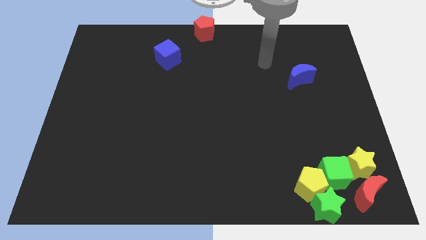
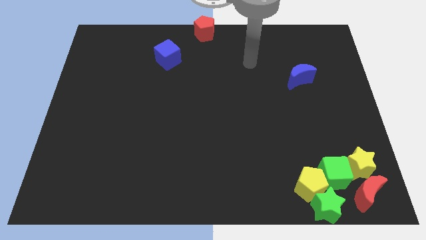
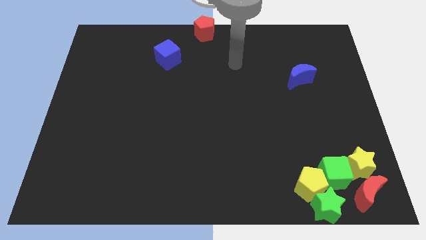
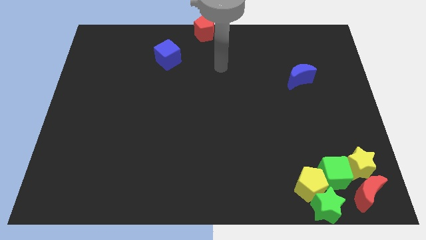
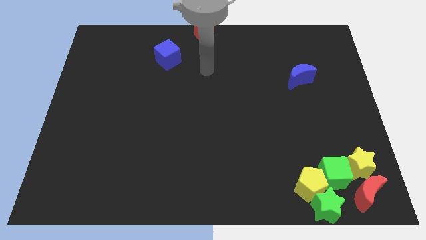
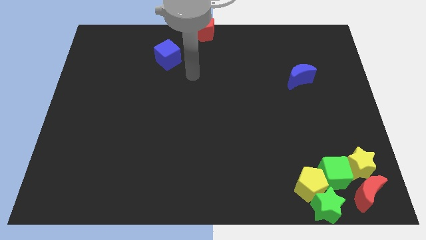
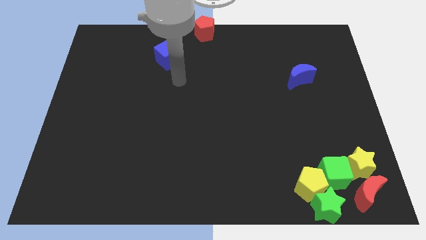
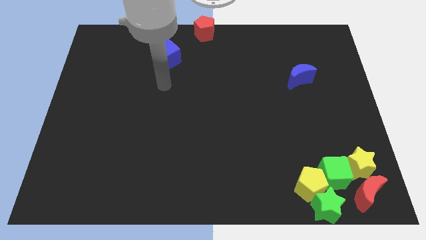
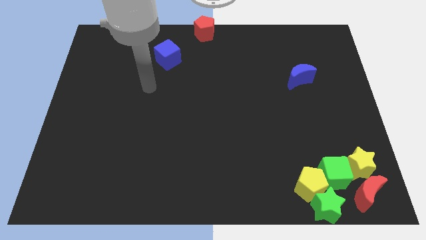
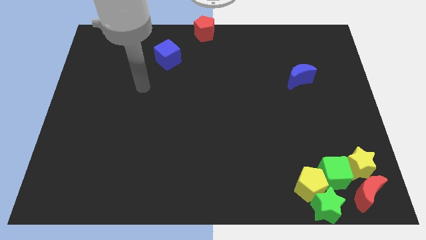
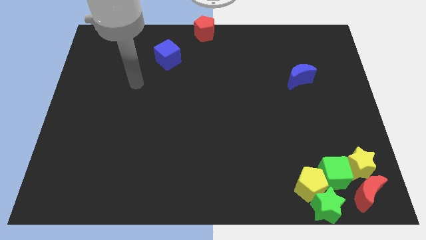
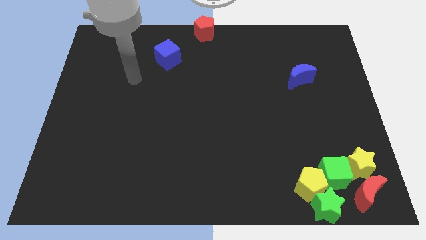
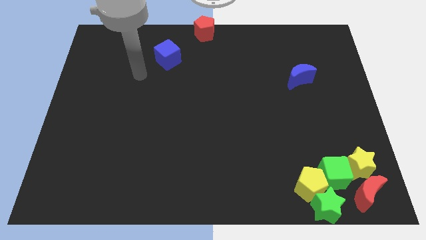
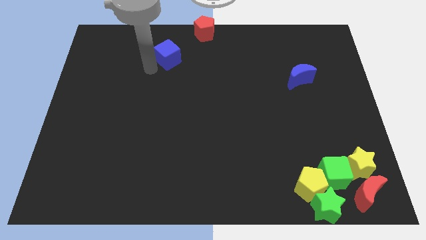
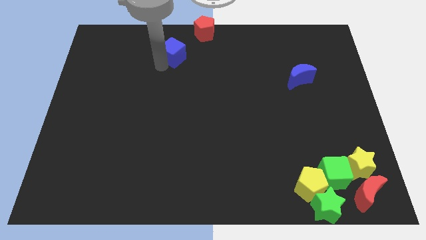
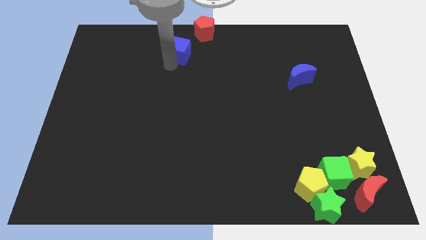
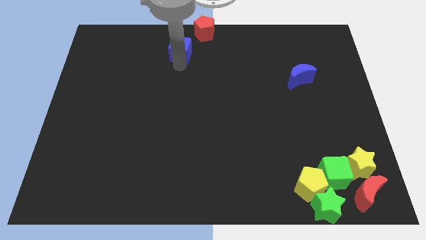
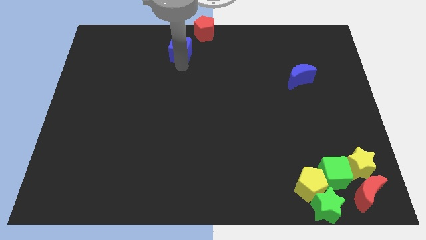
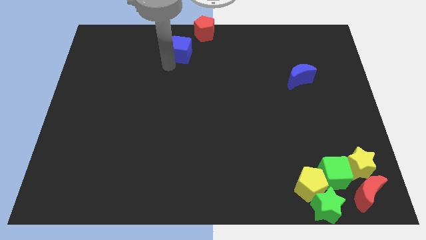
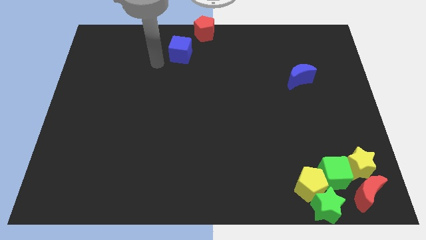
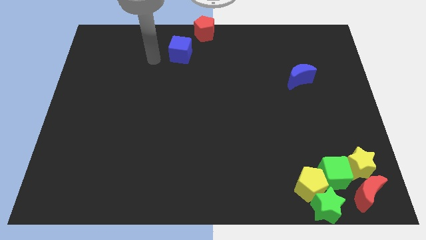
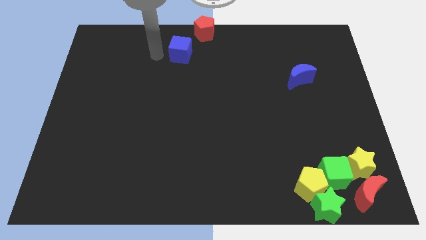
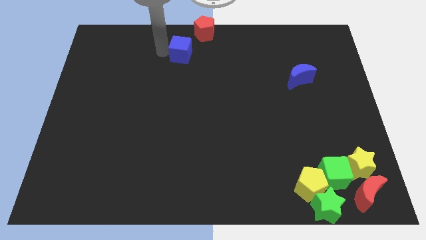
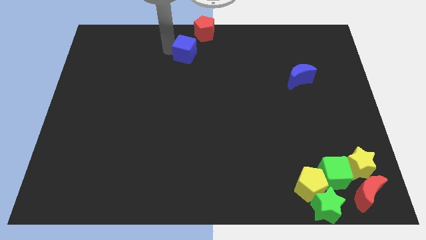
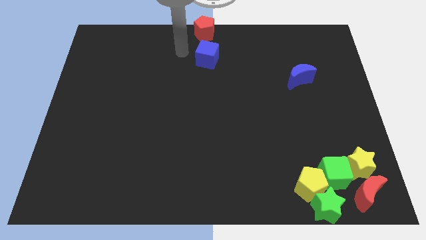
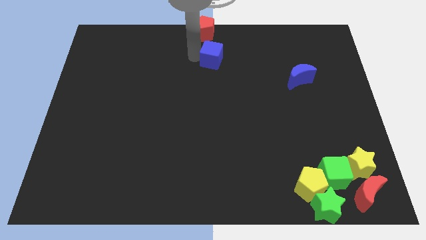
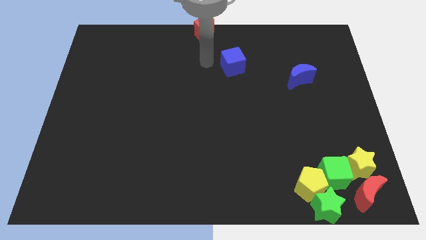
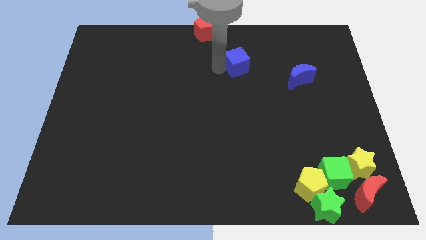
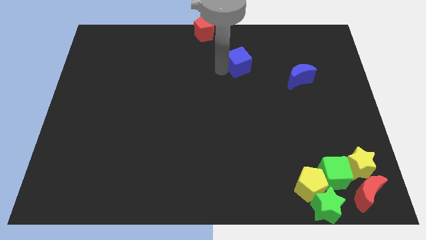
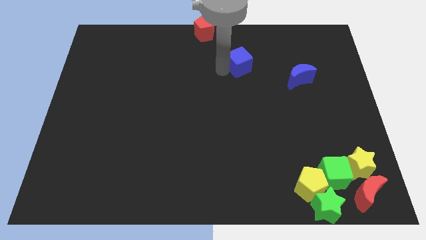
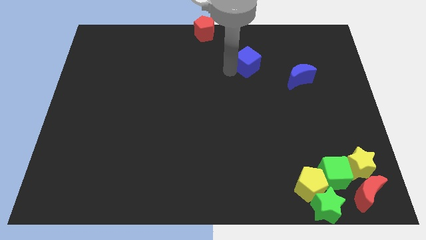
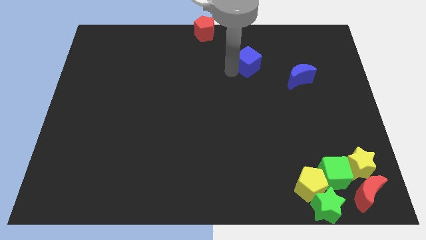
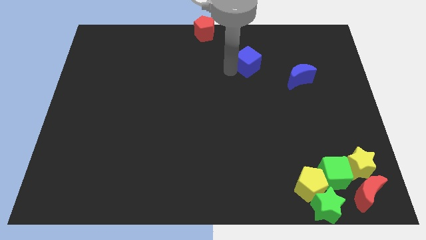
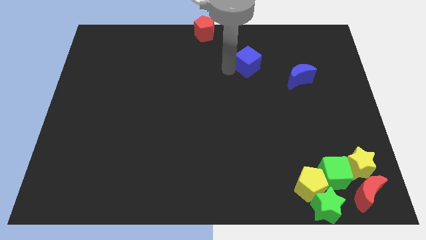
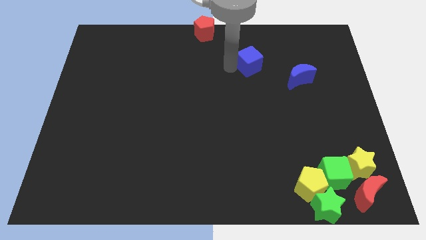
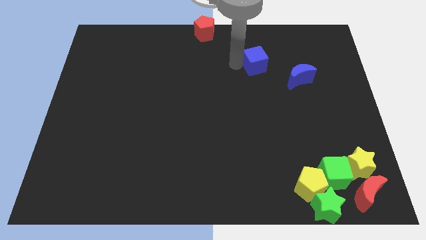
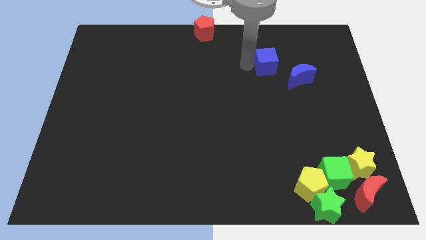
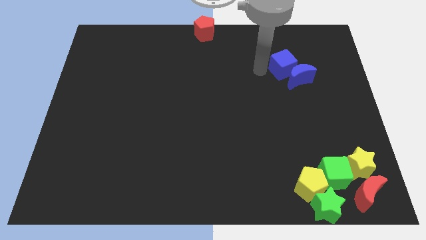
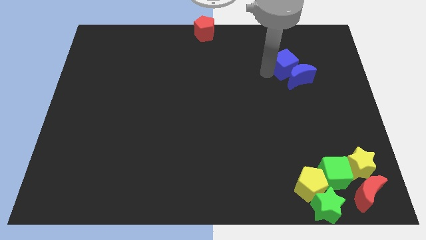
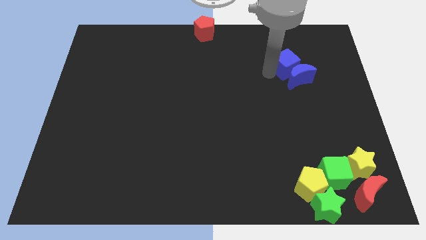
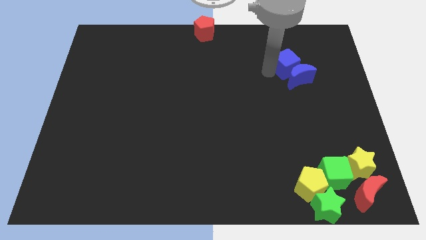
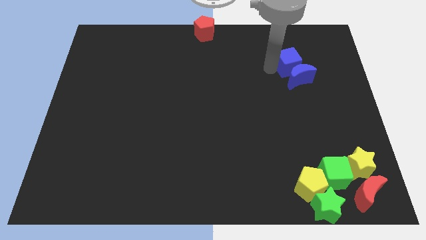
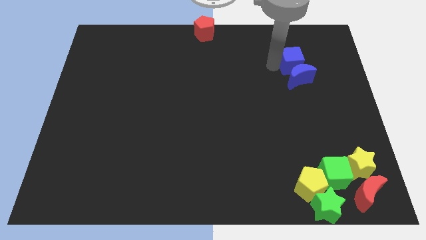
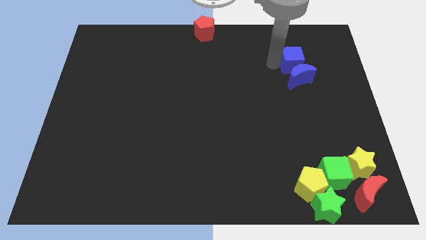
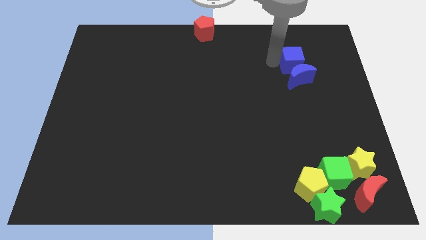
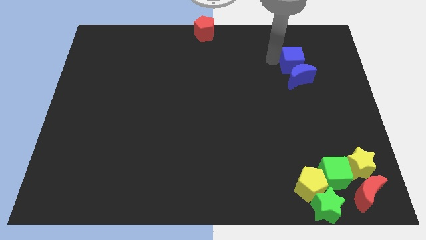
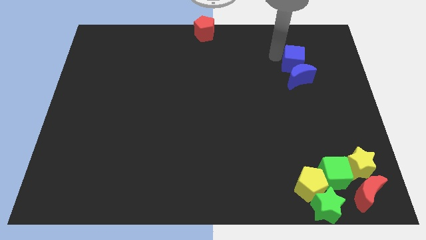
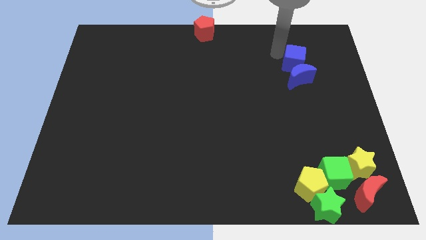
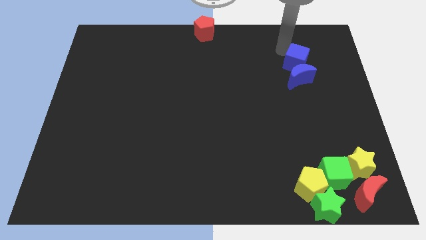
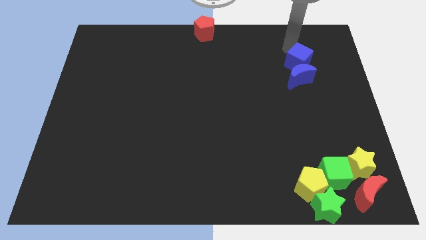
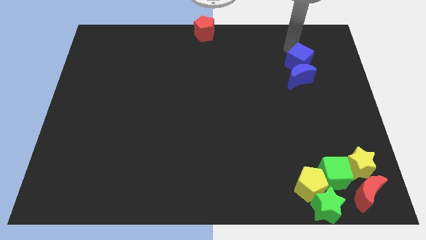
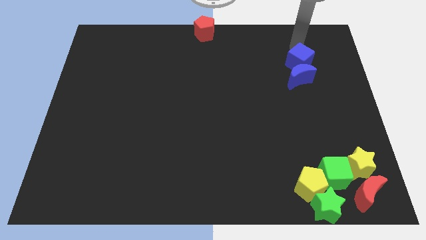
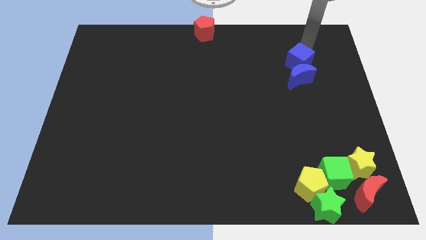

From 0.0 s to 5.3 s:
move the blue cube above the blue crescent

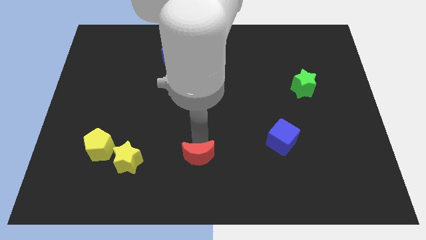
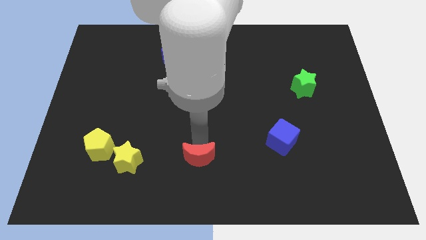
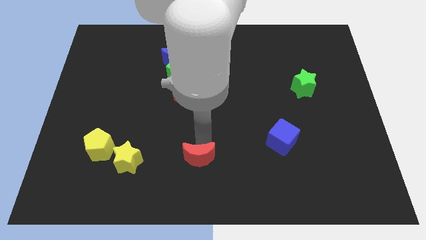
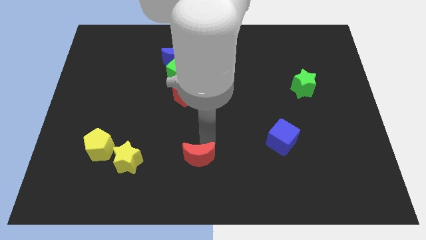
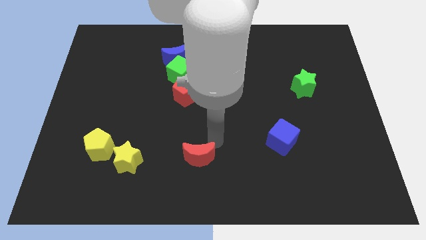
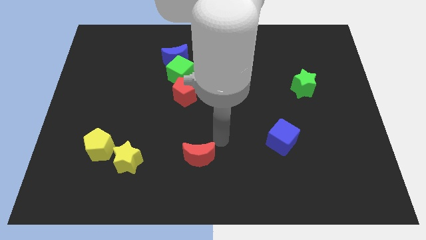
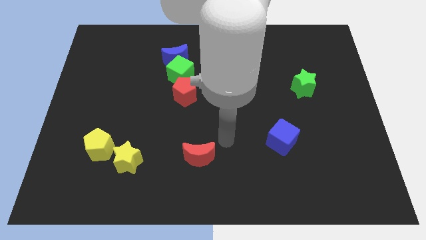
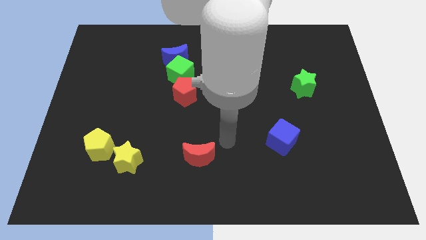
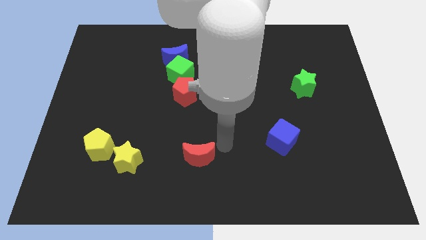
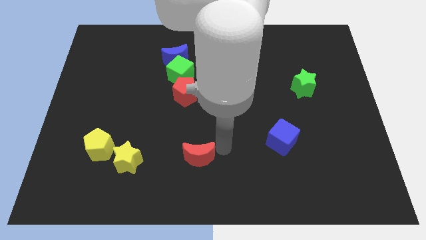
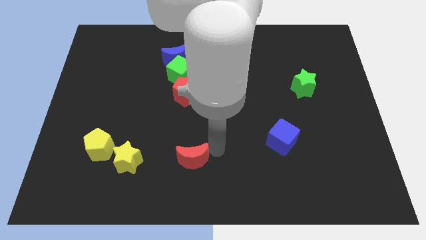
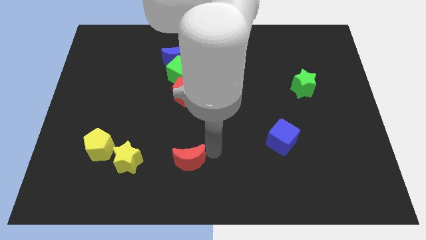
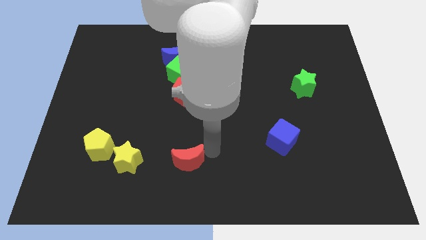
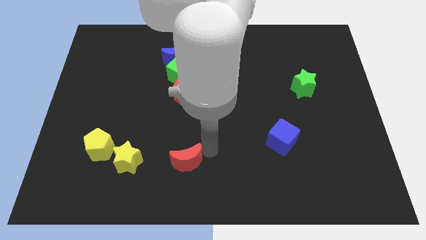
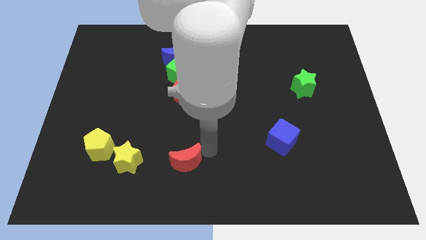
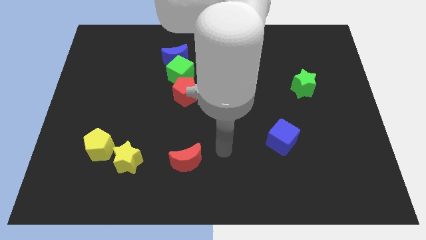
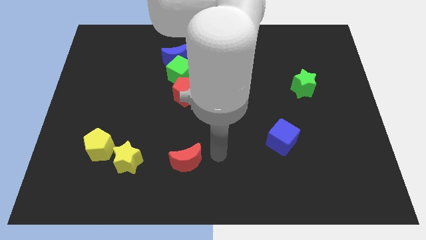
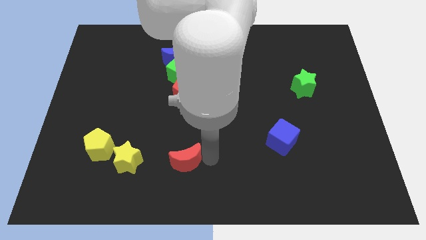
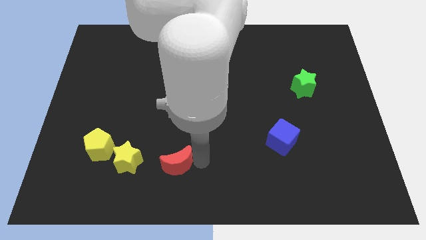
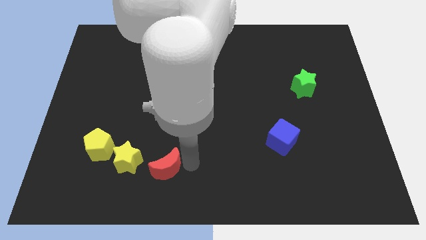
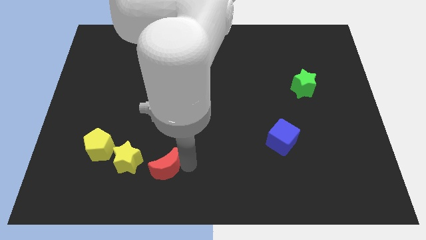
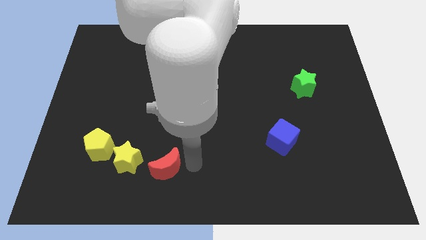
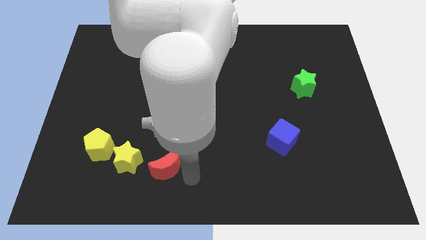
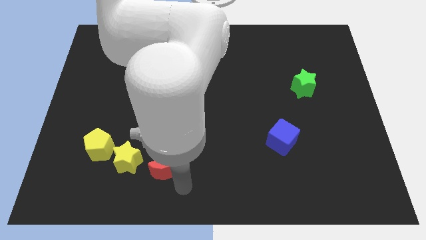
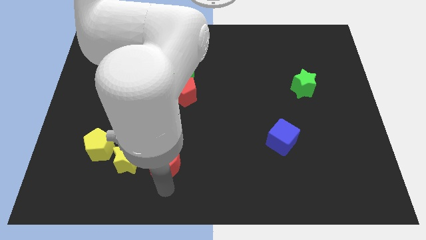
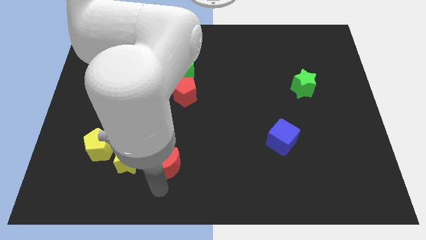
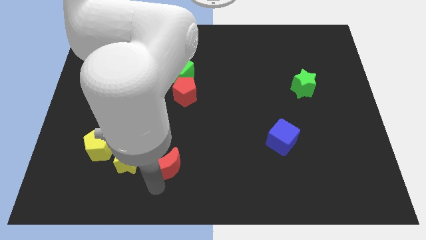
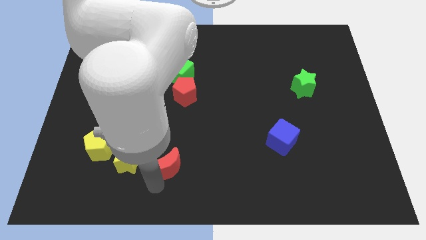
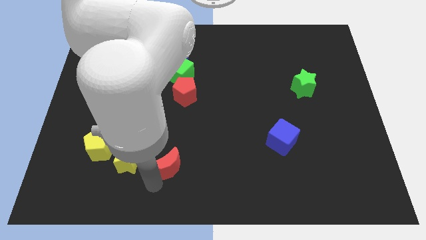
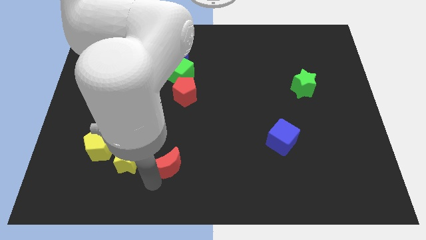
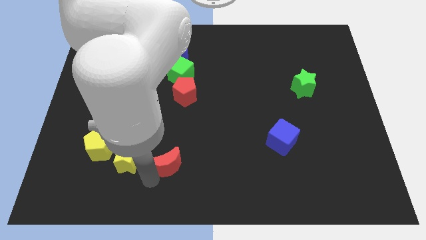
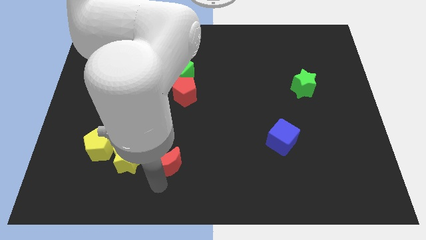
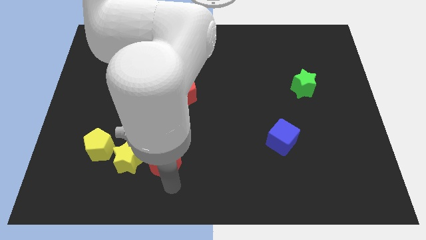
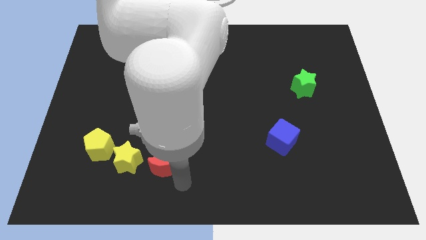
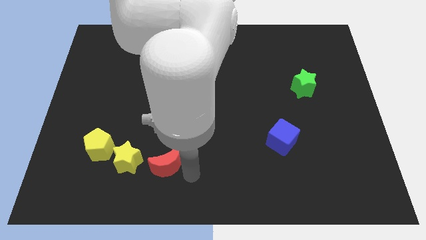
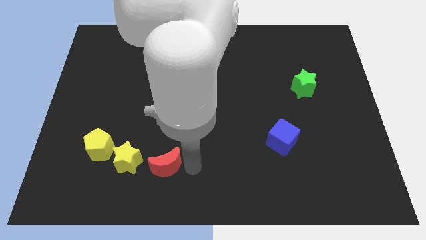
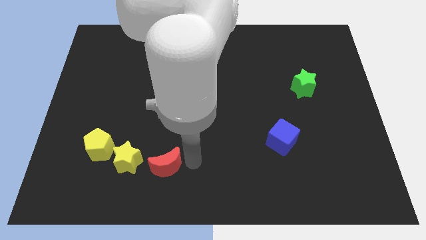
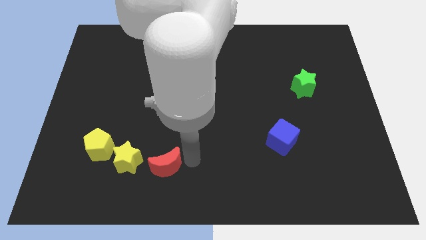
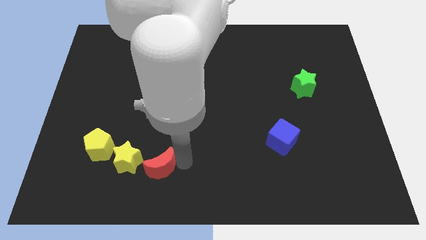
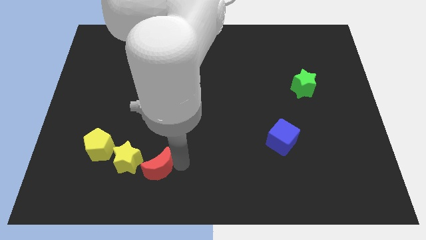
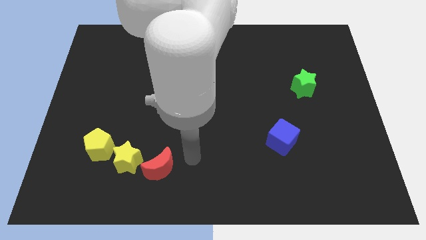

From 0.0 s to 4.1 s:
push the red crescent towards yellow star
